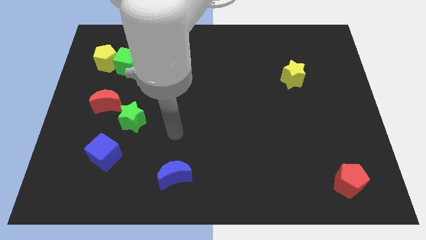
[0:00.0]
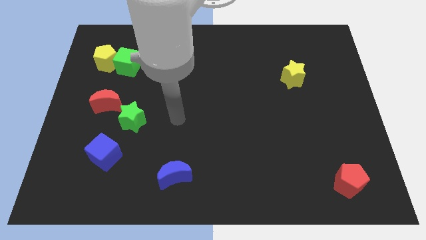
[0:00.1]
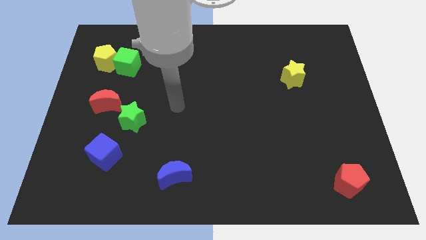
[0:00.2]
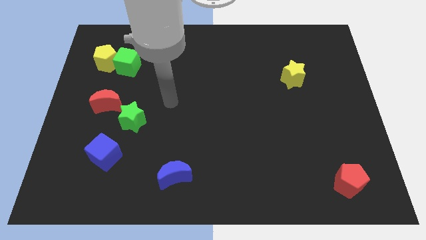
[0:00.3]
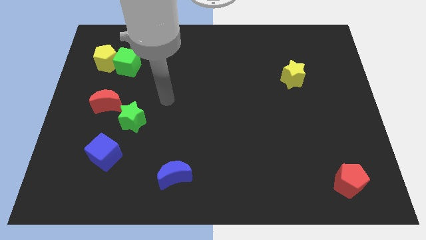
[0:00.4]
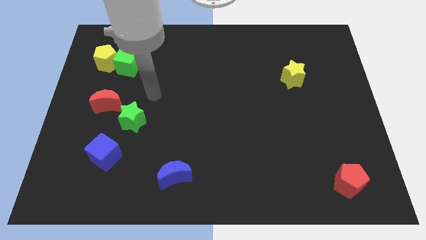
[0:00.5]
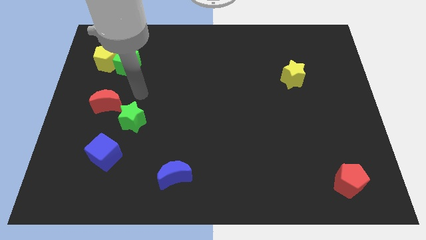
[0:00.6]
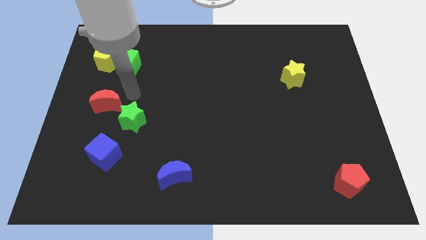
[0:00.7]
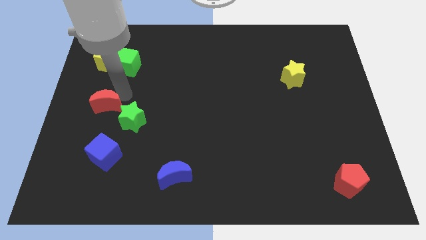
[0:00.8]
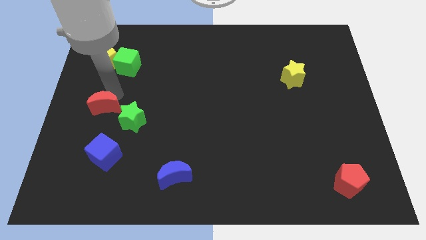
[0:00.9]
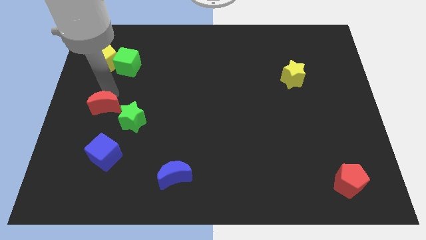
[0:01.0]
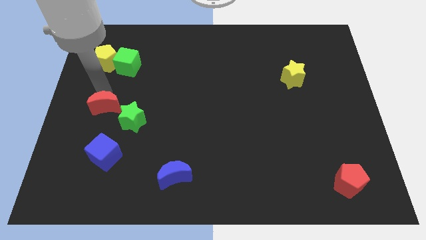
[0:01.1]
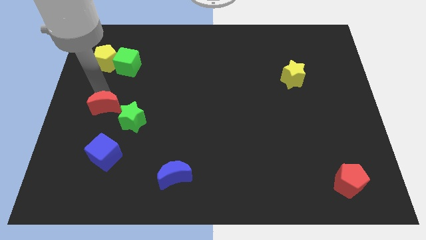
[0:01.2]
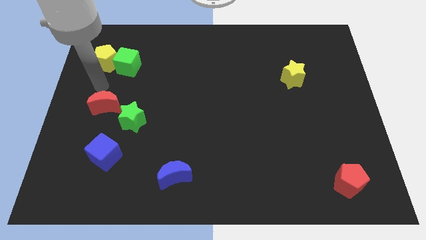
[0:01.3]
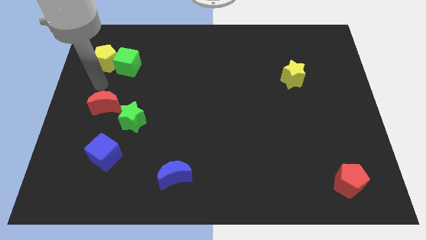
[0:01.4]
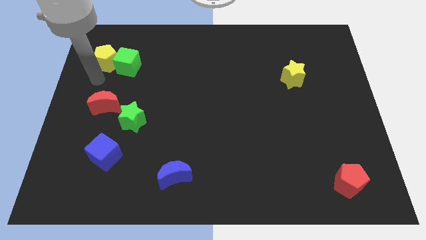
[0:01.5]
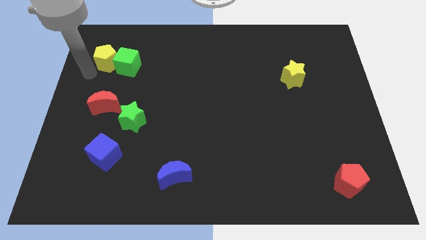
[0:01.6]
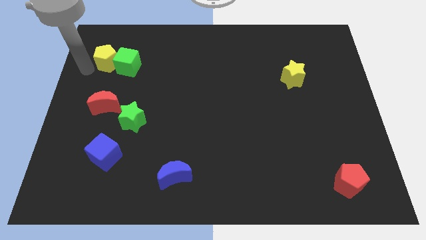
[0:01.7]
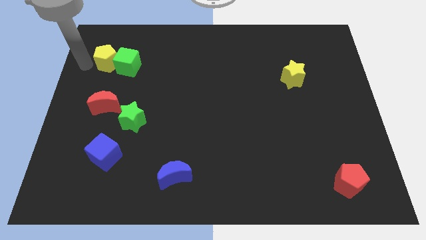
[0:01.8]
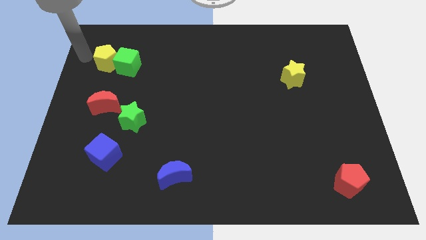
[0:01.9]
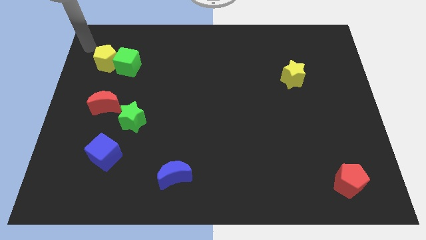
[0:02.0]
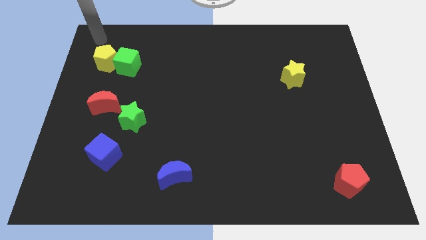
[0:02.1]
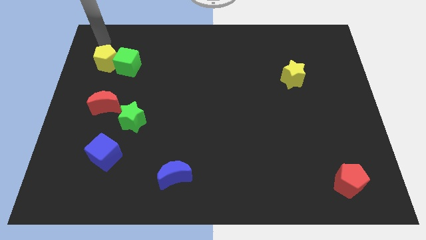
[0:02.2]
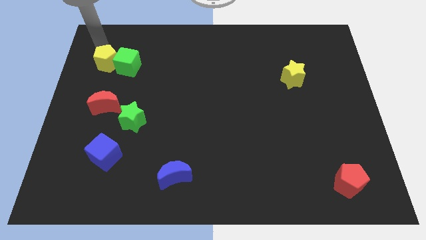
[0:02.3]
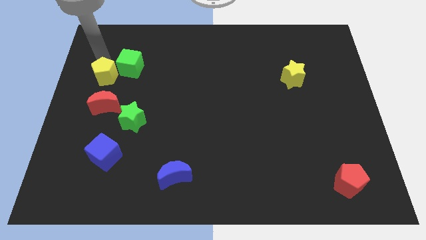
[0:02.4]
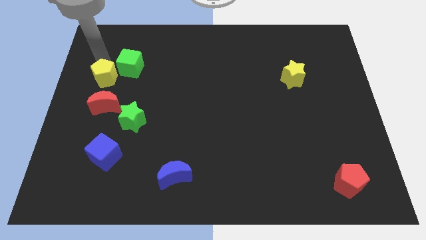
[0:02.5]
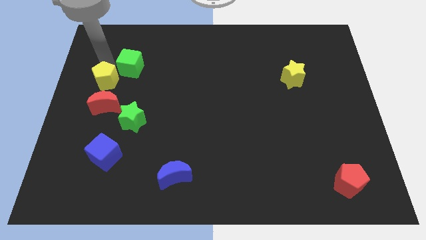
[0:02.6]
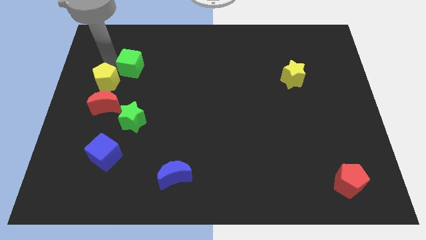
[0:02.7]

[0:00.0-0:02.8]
slightly move down the yellow pentagon

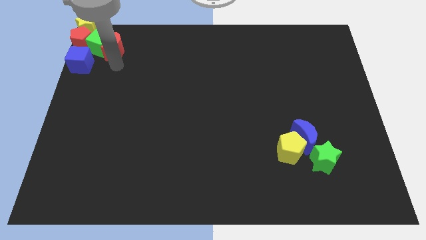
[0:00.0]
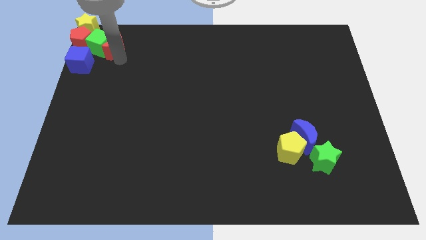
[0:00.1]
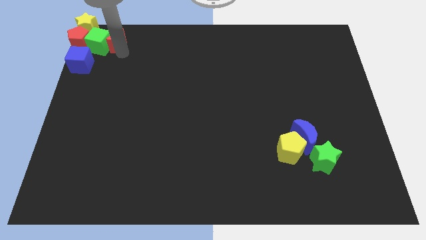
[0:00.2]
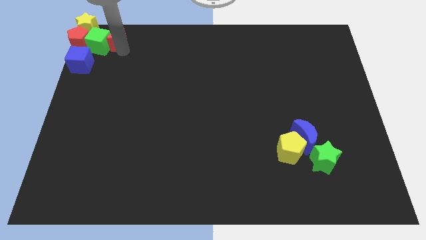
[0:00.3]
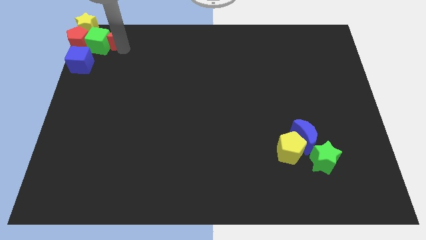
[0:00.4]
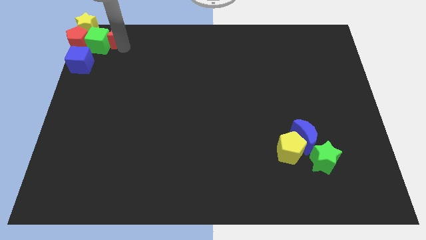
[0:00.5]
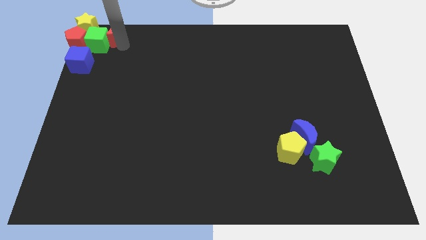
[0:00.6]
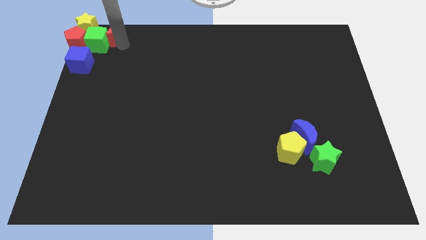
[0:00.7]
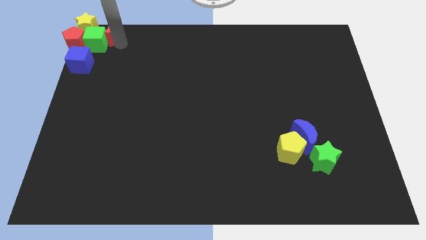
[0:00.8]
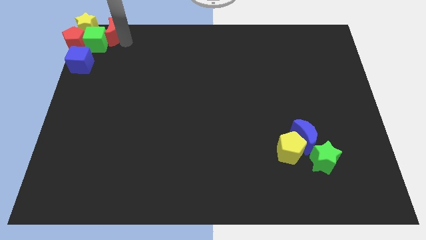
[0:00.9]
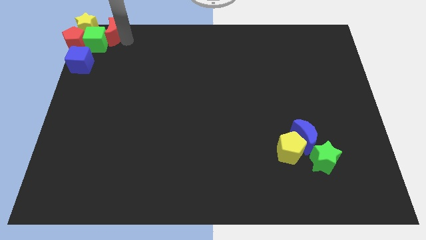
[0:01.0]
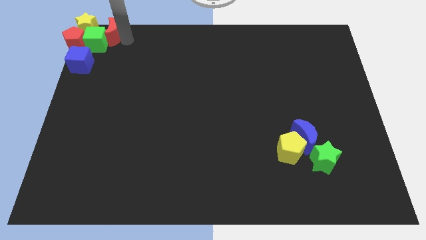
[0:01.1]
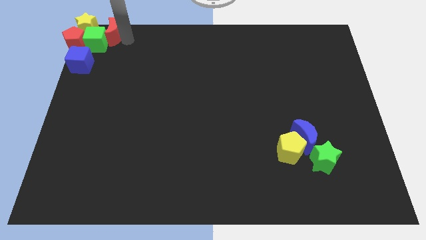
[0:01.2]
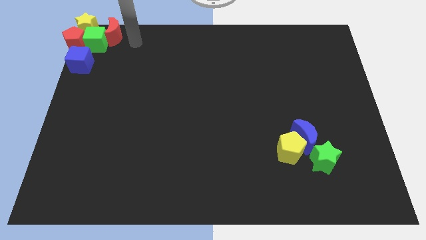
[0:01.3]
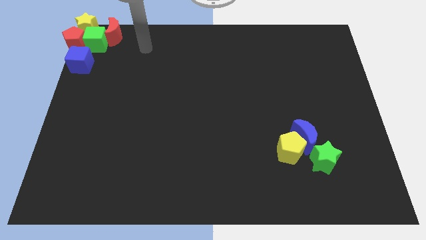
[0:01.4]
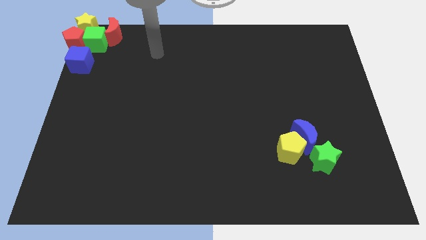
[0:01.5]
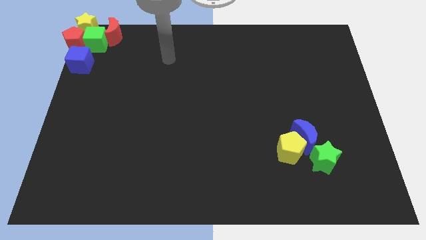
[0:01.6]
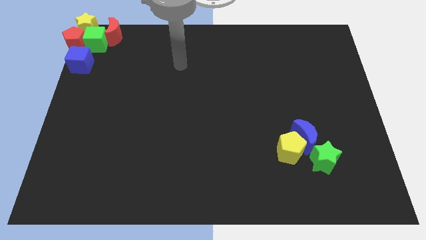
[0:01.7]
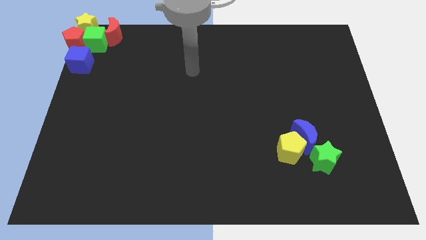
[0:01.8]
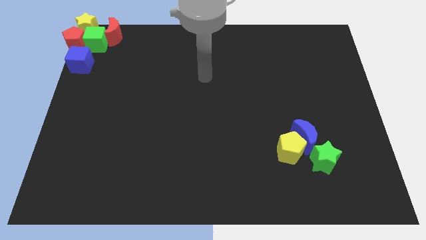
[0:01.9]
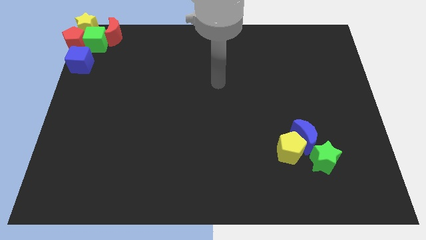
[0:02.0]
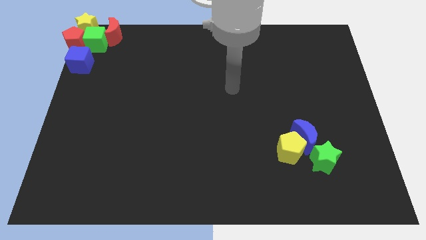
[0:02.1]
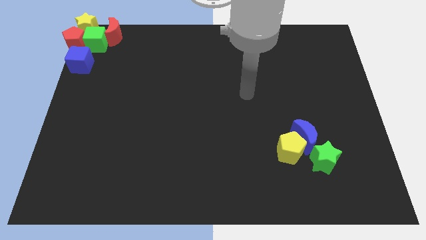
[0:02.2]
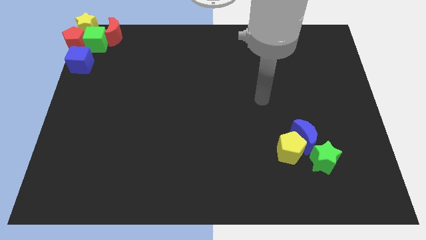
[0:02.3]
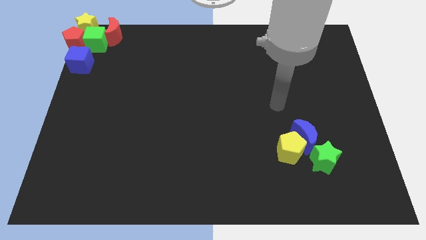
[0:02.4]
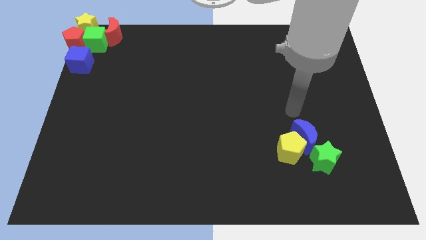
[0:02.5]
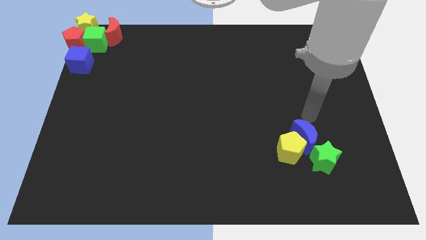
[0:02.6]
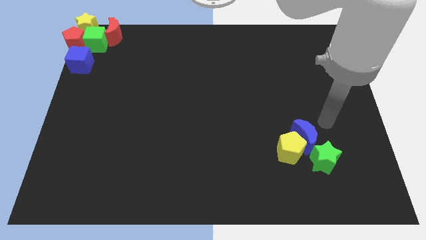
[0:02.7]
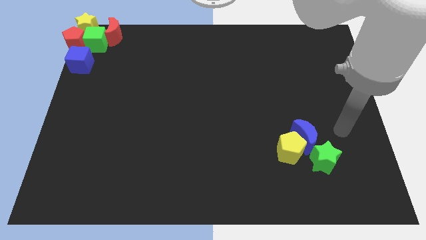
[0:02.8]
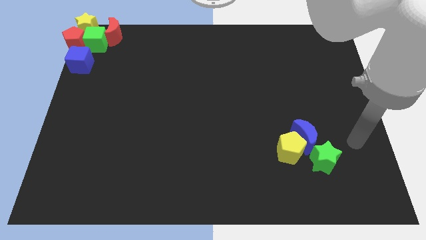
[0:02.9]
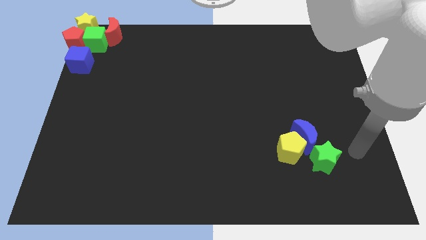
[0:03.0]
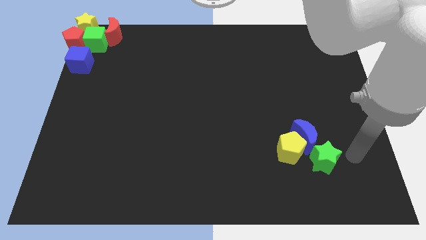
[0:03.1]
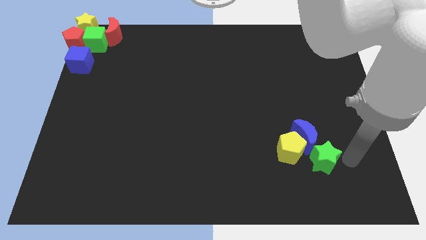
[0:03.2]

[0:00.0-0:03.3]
move the arm to the right of the green star

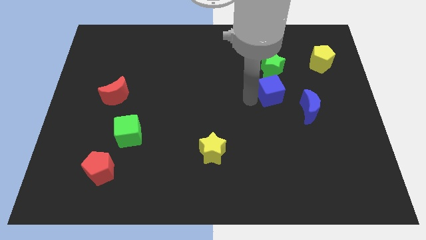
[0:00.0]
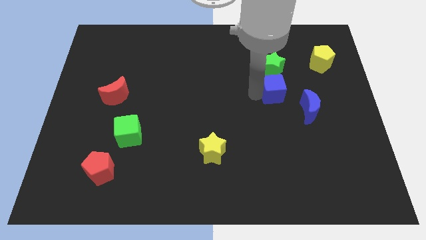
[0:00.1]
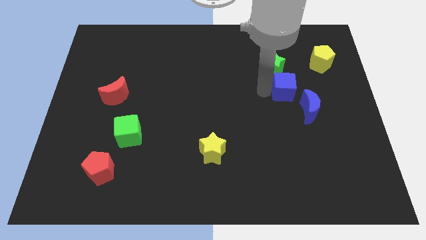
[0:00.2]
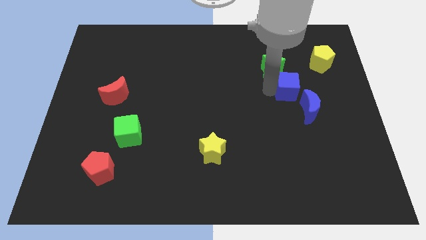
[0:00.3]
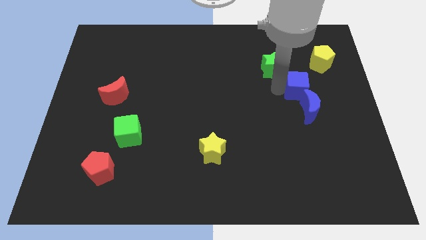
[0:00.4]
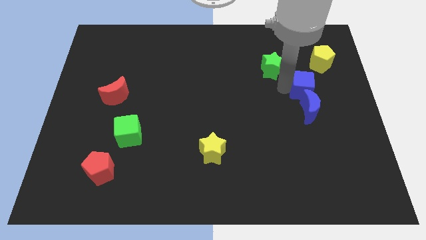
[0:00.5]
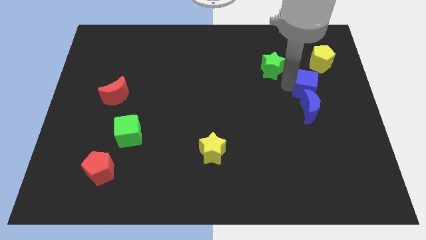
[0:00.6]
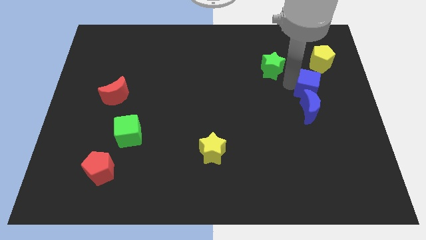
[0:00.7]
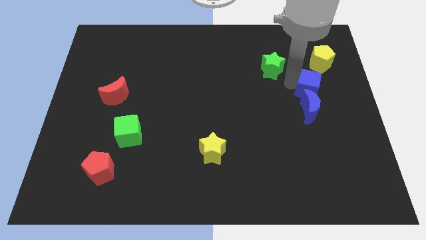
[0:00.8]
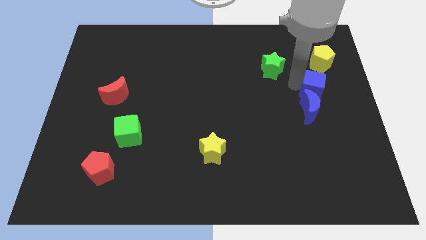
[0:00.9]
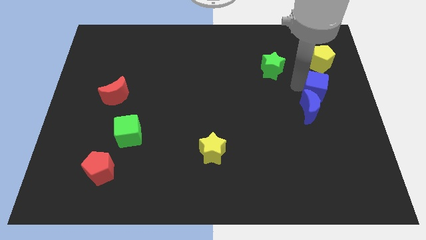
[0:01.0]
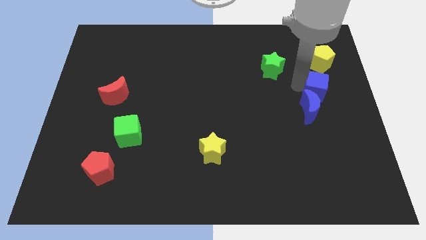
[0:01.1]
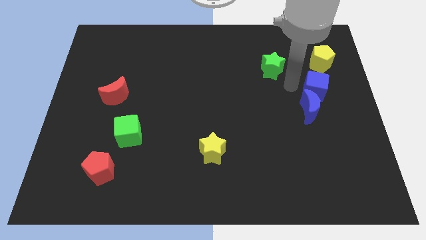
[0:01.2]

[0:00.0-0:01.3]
put blue cube in between yellow pentagon and blue crescent

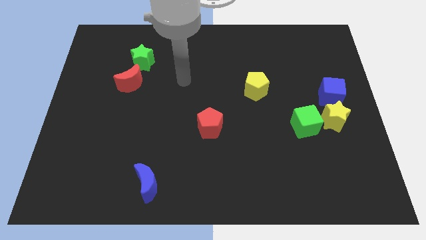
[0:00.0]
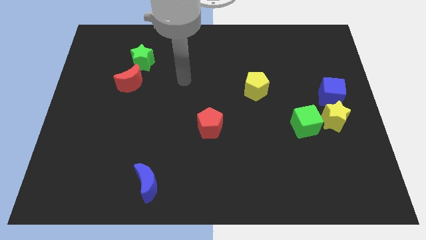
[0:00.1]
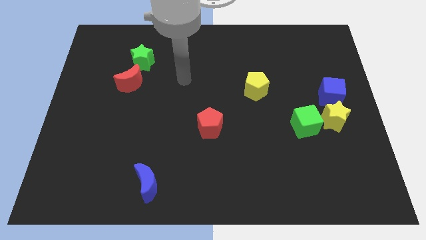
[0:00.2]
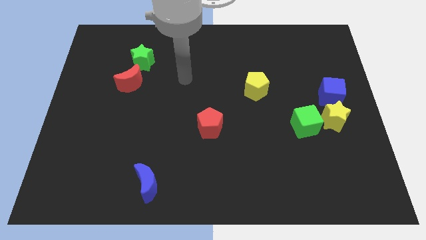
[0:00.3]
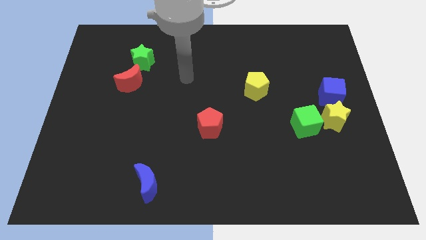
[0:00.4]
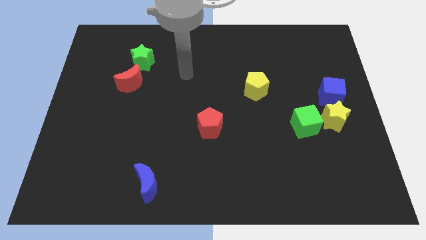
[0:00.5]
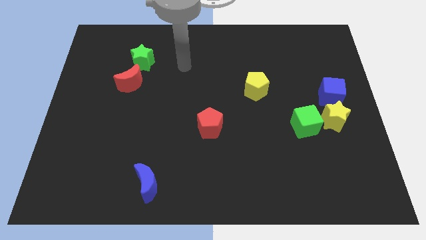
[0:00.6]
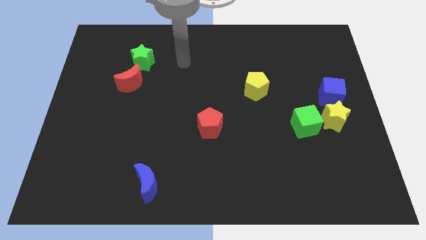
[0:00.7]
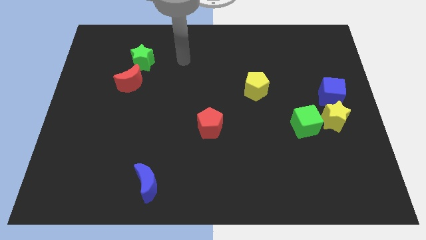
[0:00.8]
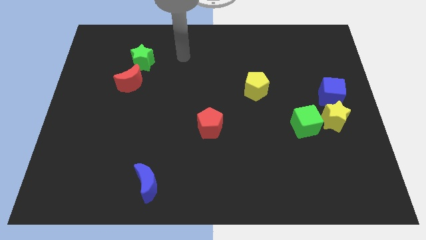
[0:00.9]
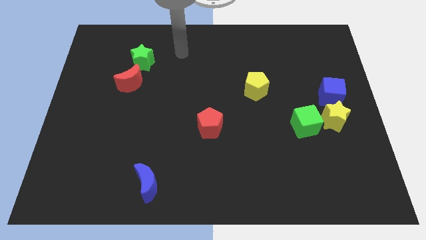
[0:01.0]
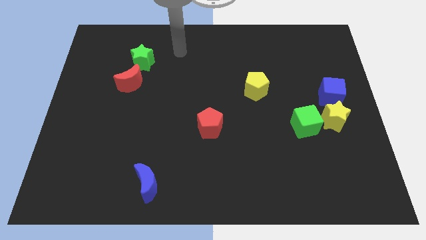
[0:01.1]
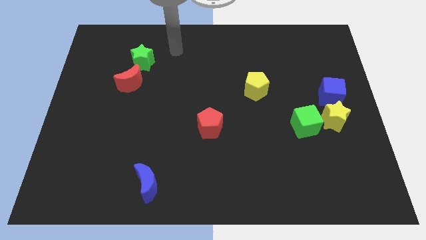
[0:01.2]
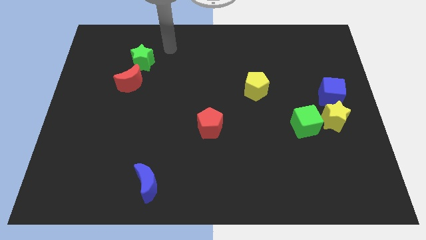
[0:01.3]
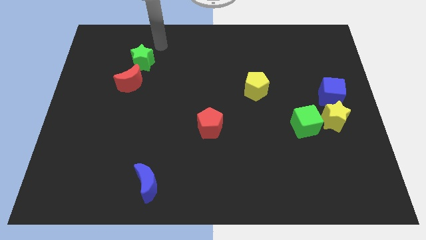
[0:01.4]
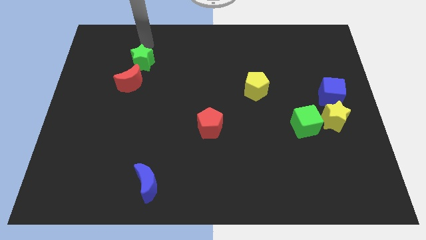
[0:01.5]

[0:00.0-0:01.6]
move your arm to the top of green star
